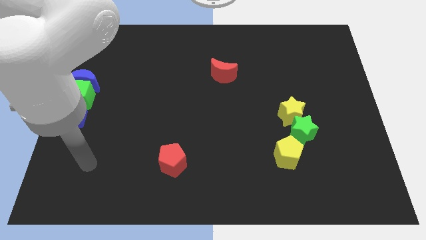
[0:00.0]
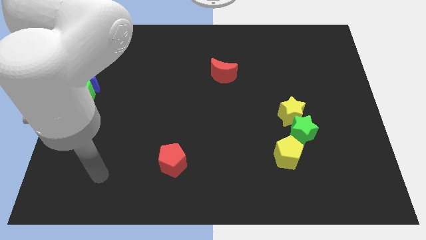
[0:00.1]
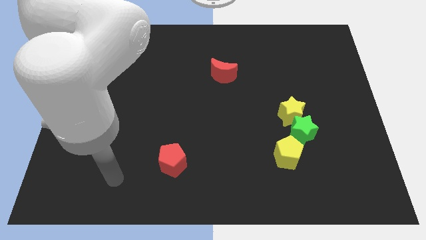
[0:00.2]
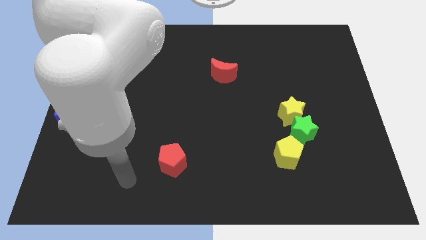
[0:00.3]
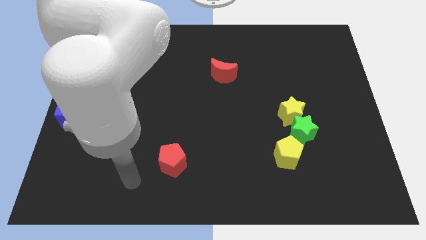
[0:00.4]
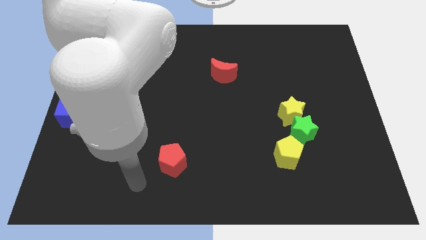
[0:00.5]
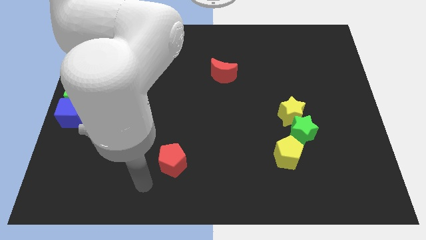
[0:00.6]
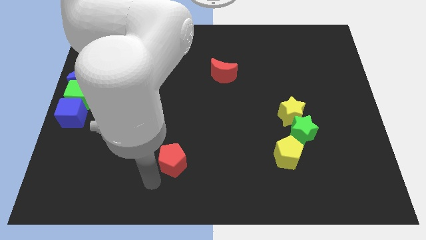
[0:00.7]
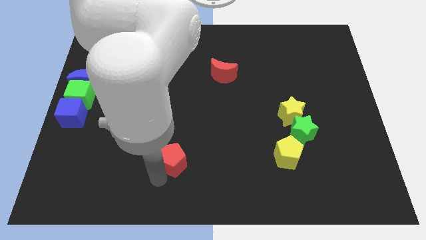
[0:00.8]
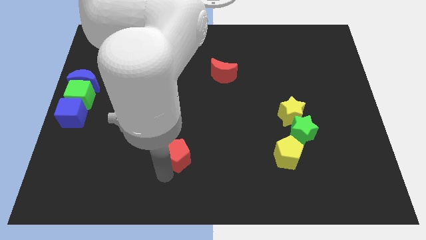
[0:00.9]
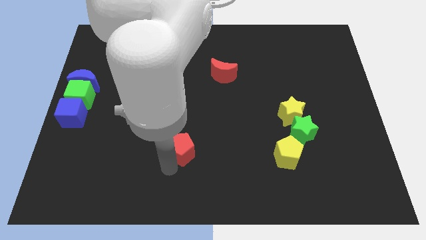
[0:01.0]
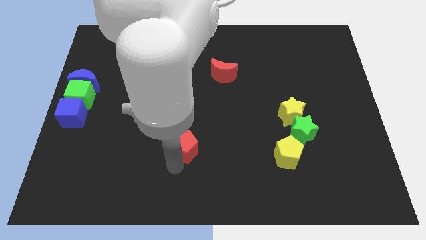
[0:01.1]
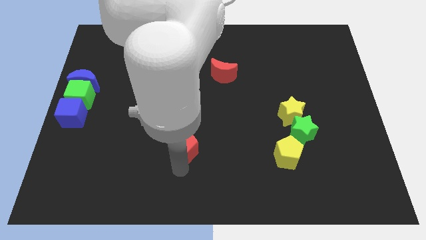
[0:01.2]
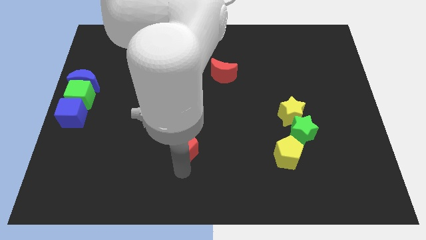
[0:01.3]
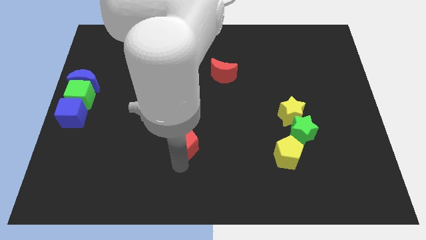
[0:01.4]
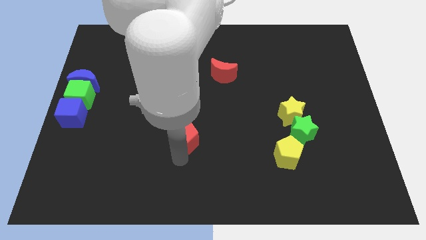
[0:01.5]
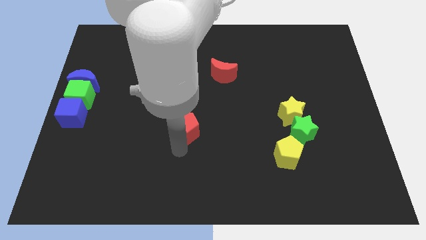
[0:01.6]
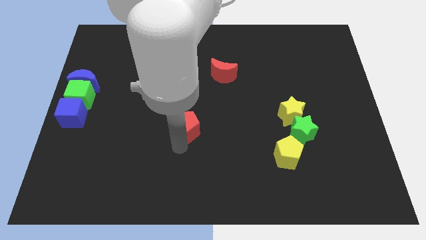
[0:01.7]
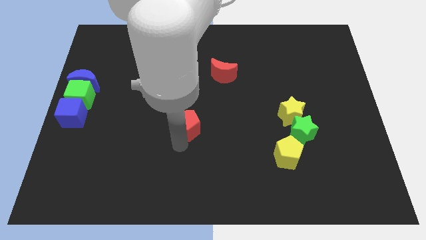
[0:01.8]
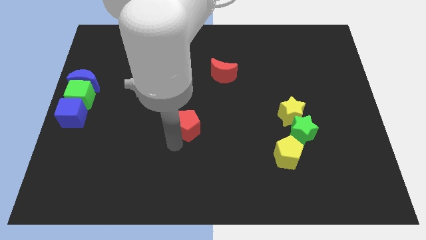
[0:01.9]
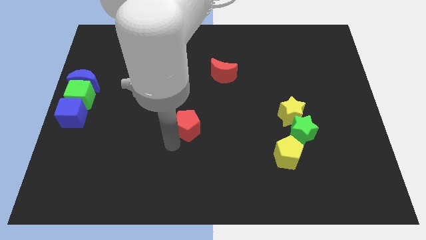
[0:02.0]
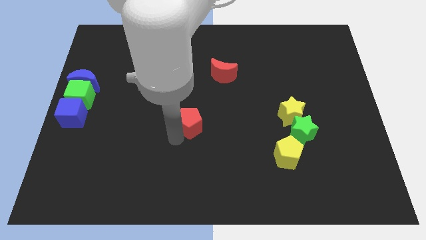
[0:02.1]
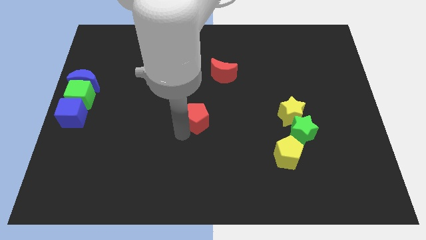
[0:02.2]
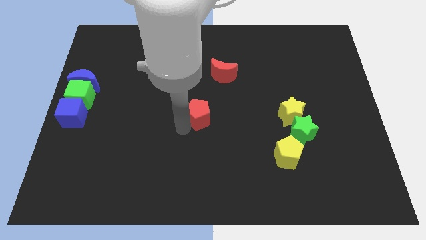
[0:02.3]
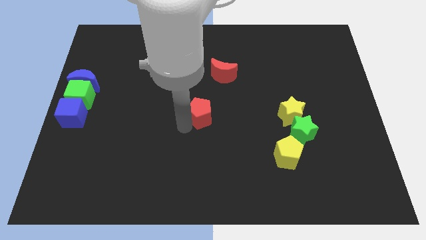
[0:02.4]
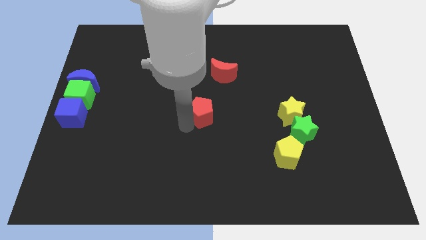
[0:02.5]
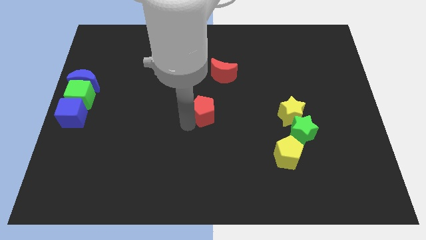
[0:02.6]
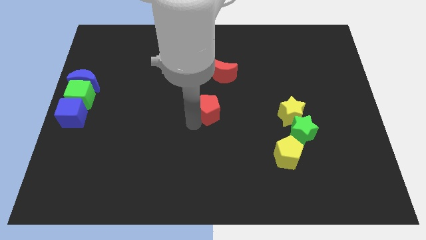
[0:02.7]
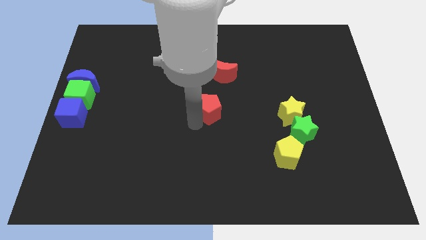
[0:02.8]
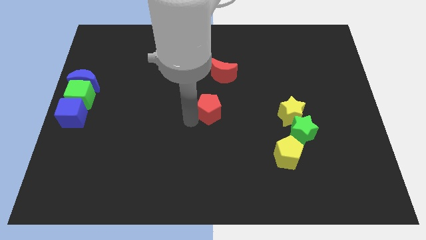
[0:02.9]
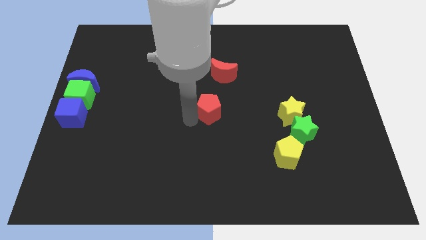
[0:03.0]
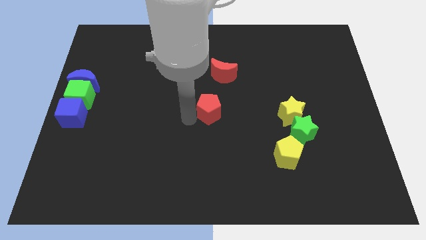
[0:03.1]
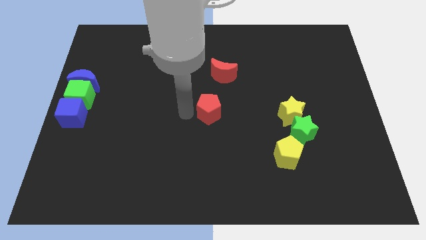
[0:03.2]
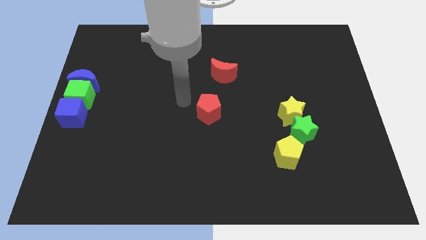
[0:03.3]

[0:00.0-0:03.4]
place red pentagon to the center

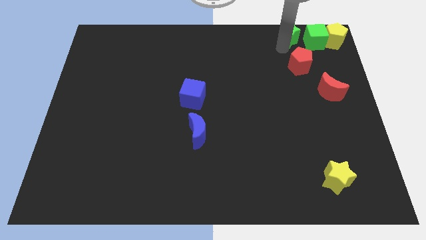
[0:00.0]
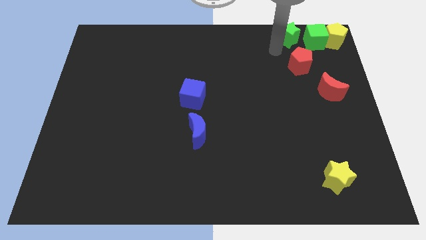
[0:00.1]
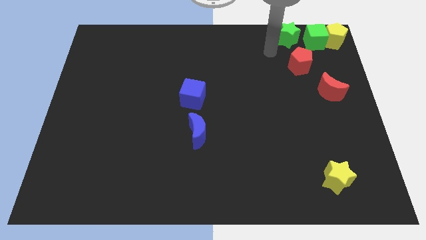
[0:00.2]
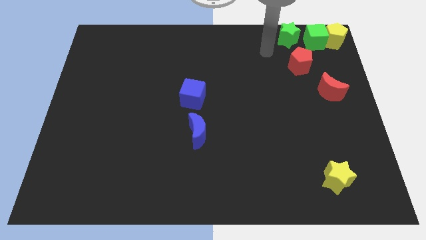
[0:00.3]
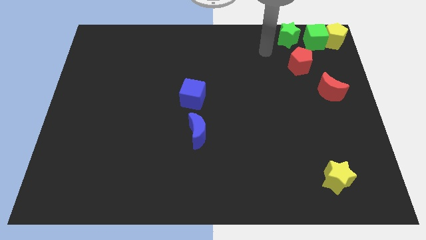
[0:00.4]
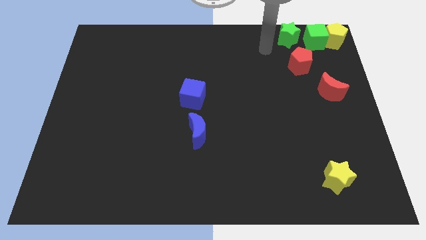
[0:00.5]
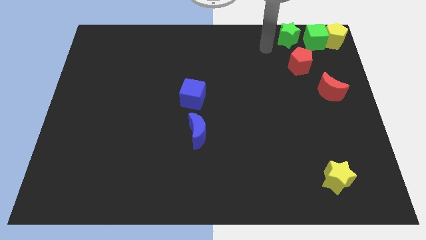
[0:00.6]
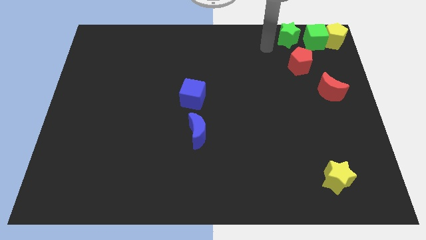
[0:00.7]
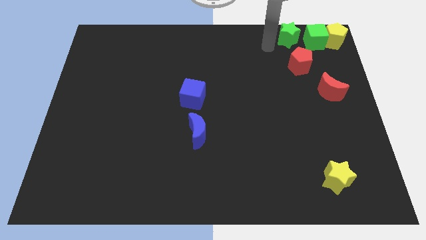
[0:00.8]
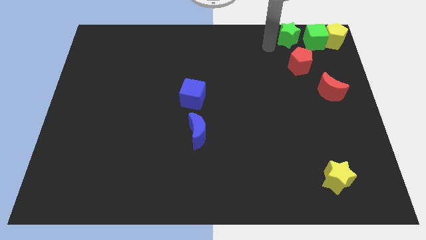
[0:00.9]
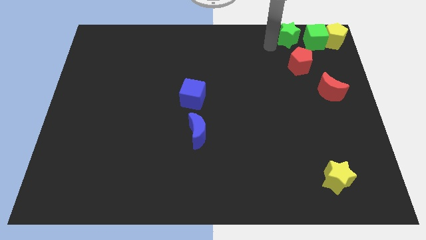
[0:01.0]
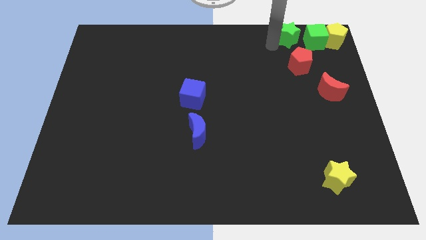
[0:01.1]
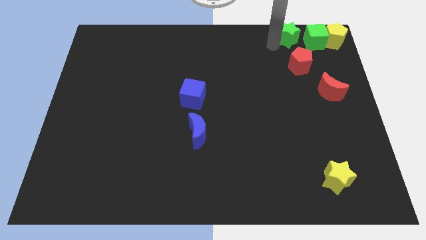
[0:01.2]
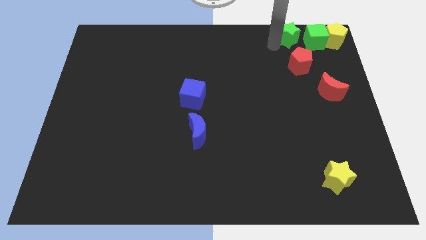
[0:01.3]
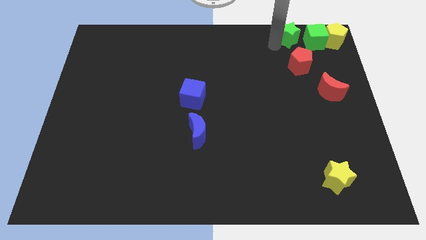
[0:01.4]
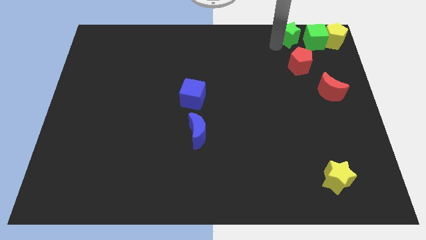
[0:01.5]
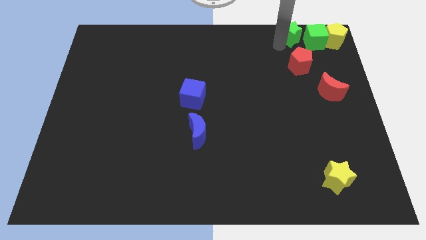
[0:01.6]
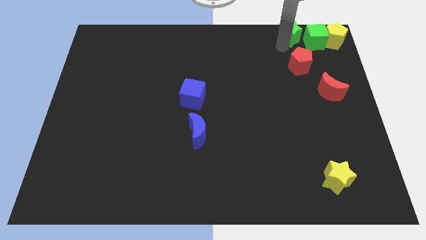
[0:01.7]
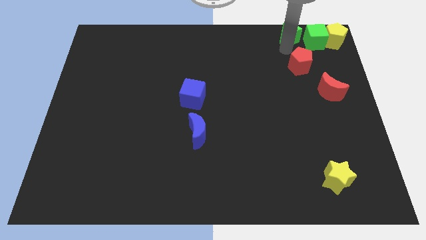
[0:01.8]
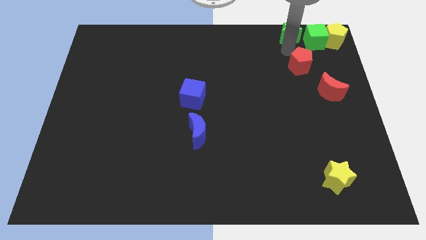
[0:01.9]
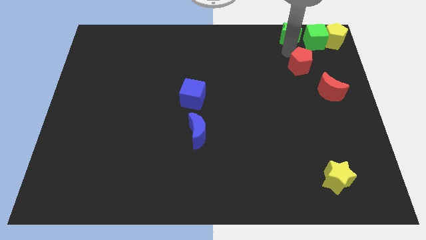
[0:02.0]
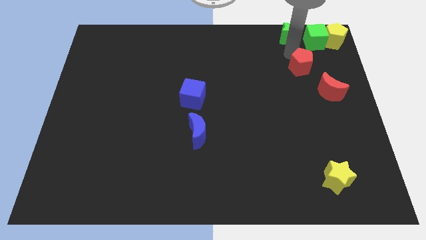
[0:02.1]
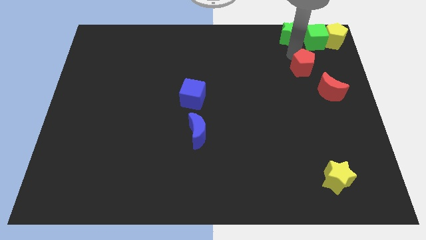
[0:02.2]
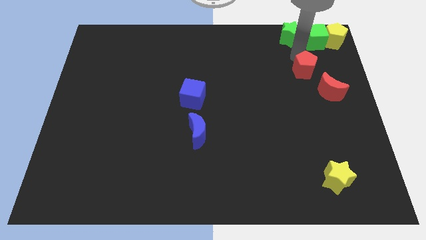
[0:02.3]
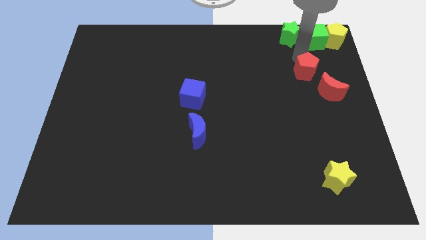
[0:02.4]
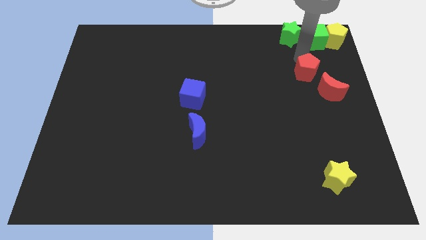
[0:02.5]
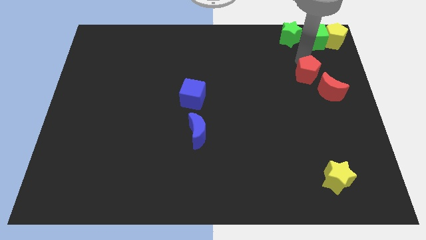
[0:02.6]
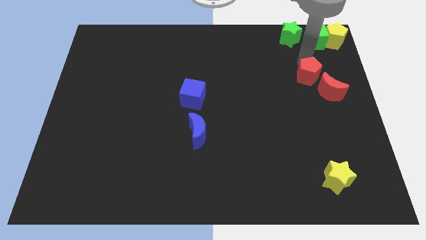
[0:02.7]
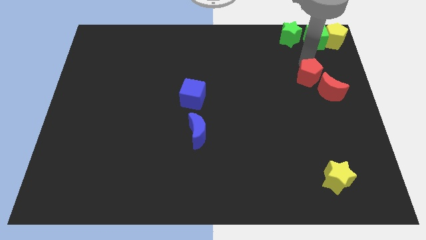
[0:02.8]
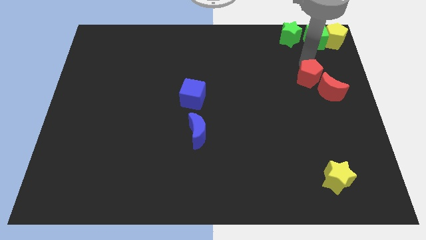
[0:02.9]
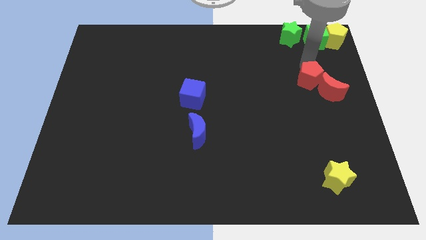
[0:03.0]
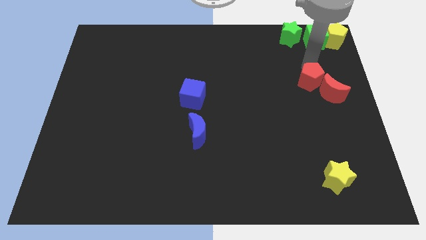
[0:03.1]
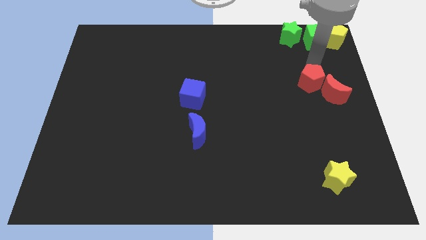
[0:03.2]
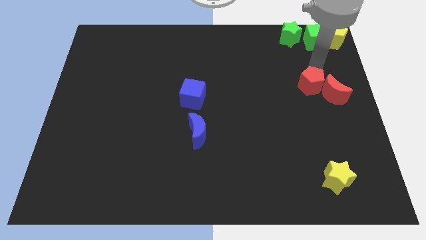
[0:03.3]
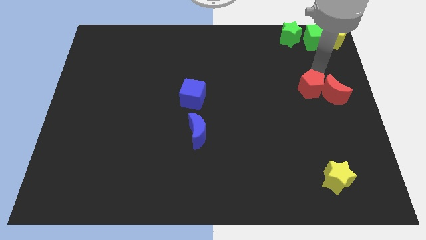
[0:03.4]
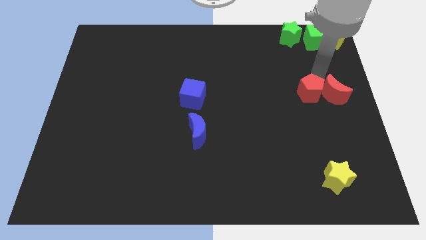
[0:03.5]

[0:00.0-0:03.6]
bring the red pentagon at the left side of the red moon

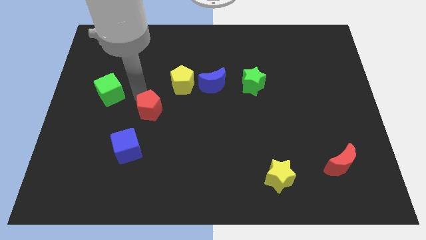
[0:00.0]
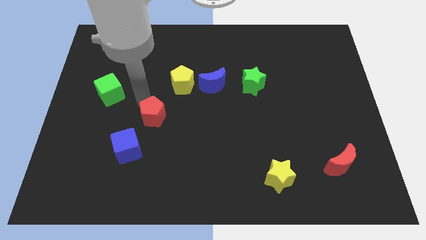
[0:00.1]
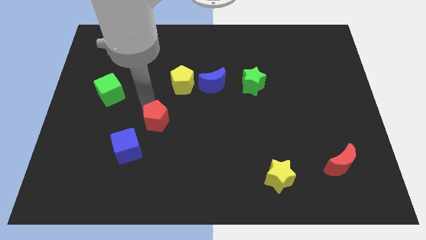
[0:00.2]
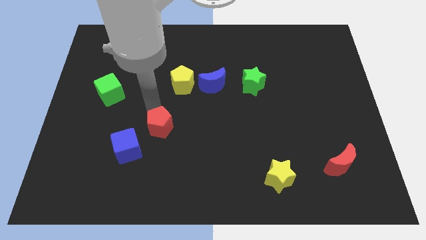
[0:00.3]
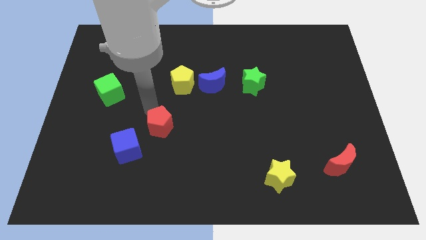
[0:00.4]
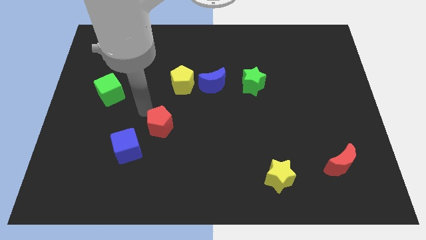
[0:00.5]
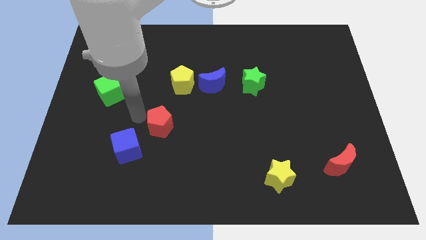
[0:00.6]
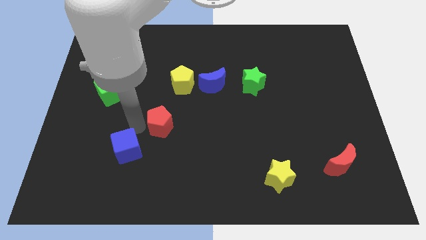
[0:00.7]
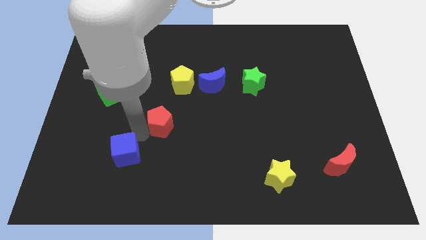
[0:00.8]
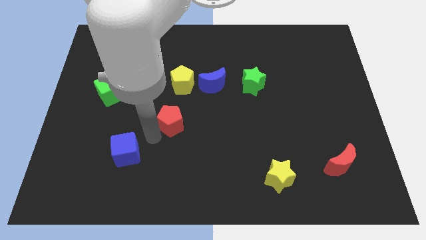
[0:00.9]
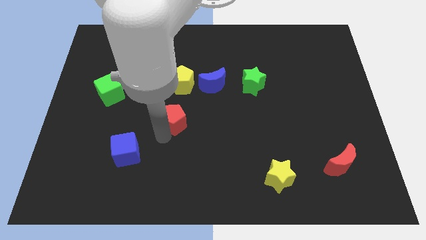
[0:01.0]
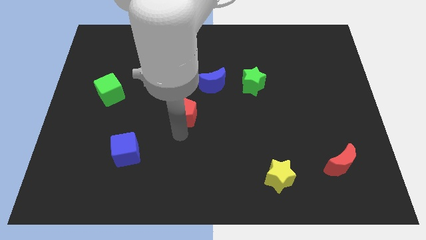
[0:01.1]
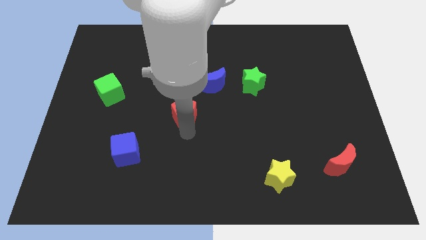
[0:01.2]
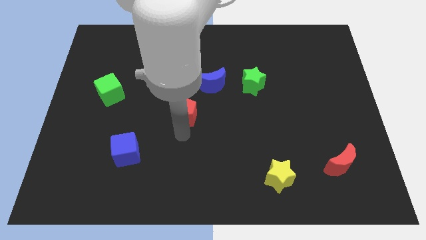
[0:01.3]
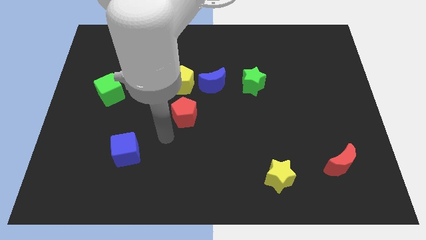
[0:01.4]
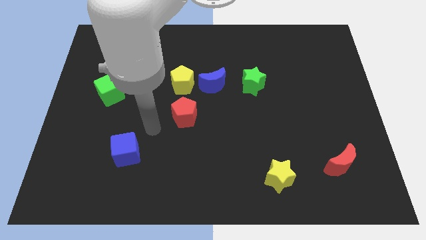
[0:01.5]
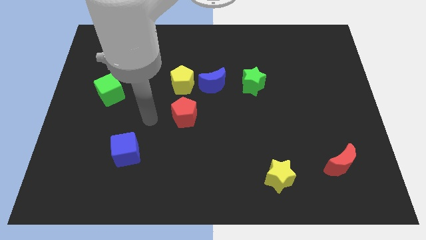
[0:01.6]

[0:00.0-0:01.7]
place the red pentagon below the yellow pentagon

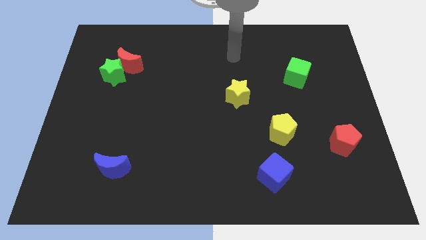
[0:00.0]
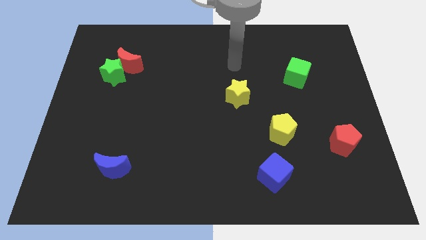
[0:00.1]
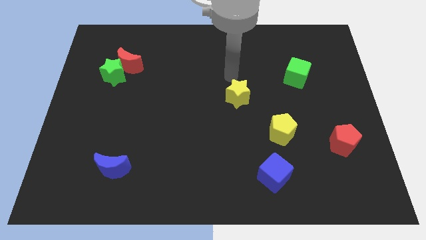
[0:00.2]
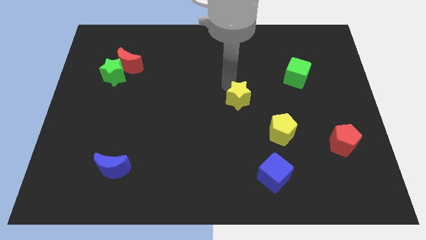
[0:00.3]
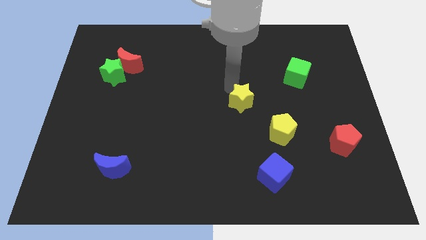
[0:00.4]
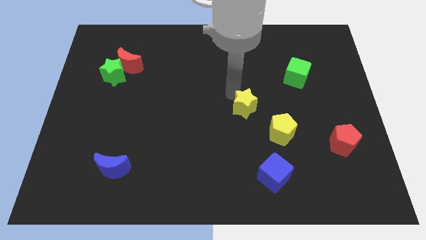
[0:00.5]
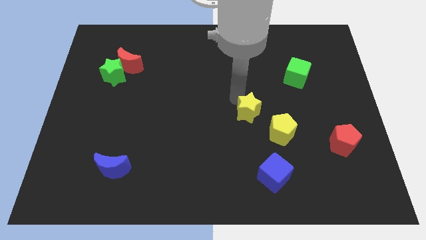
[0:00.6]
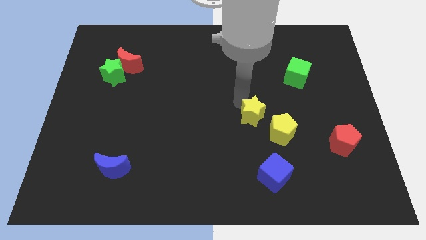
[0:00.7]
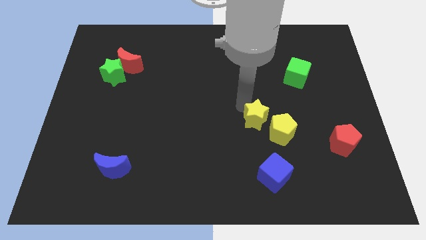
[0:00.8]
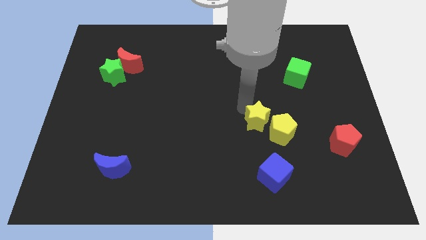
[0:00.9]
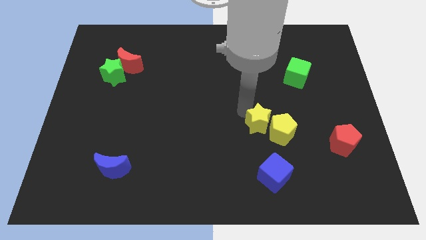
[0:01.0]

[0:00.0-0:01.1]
push the yellow star towards the yellow pentagon
